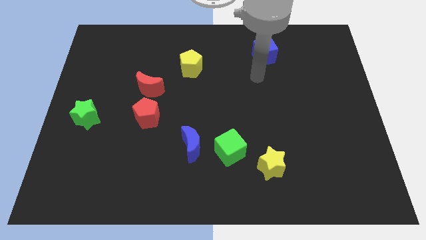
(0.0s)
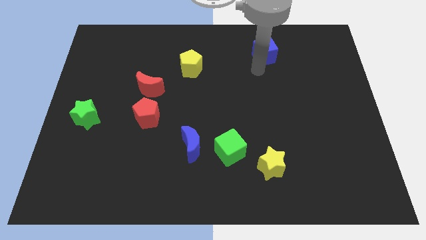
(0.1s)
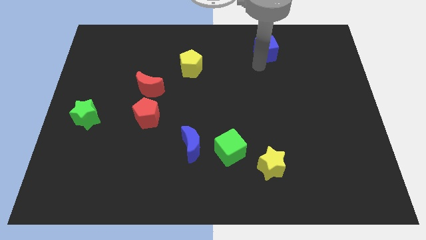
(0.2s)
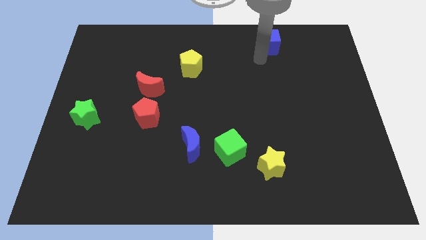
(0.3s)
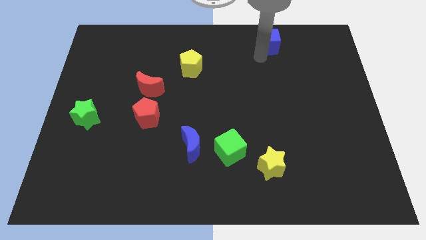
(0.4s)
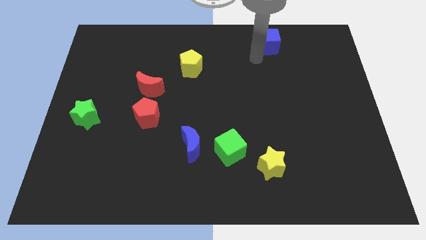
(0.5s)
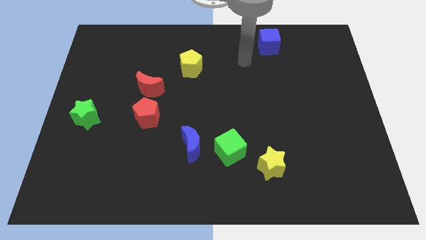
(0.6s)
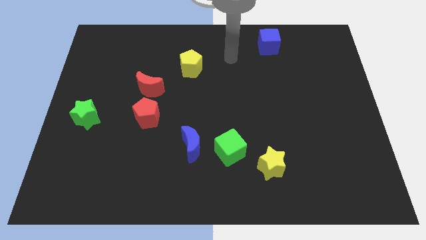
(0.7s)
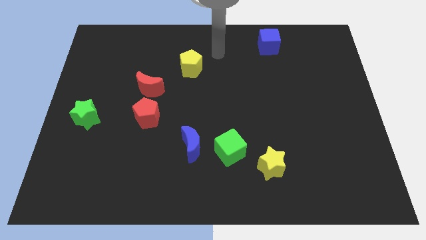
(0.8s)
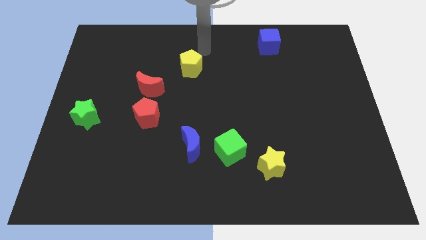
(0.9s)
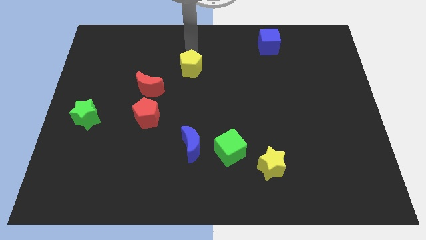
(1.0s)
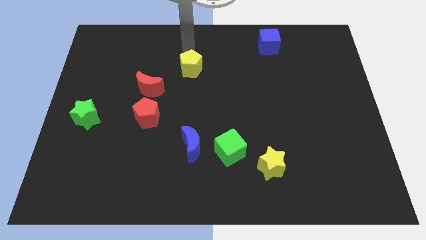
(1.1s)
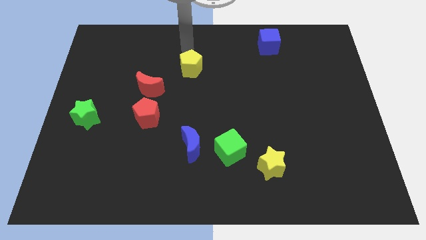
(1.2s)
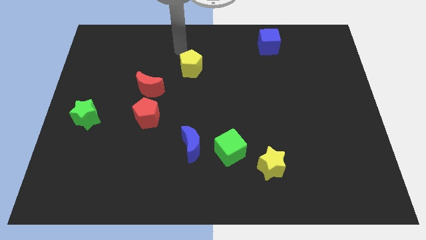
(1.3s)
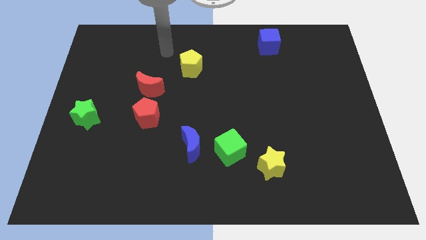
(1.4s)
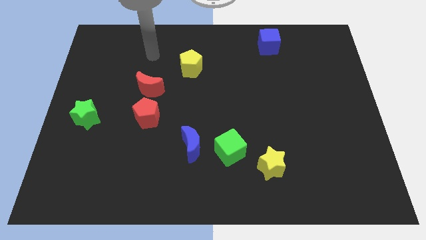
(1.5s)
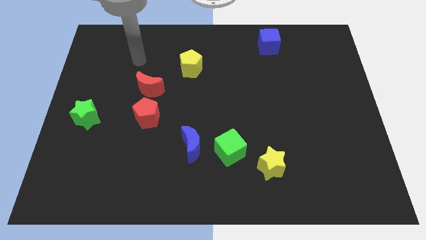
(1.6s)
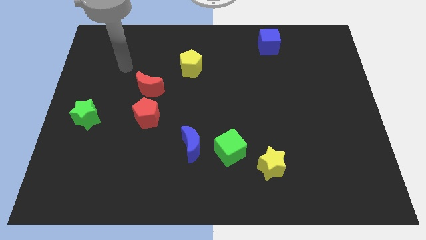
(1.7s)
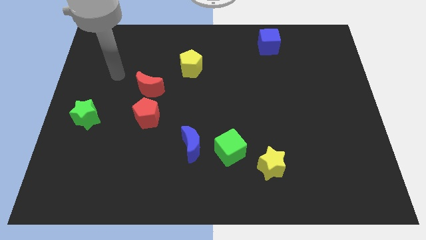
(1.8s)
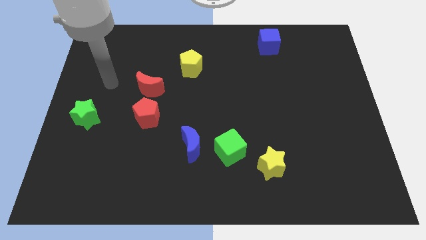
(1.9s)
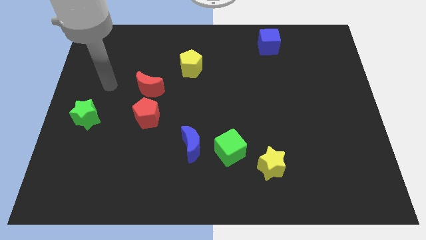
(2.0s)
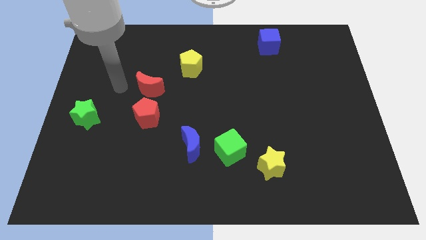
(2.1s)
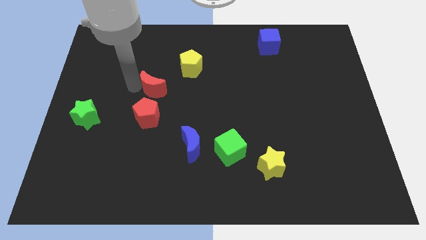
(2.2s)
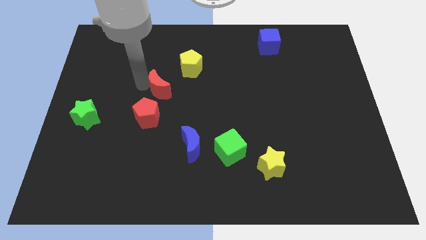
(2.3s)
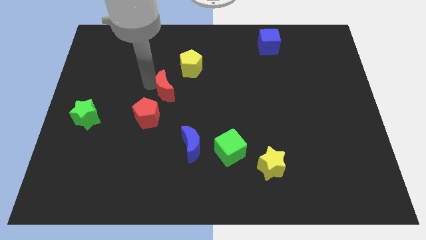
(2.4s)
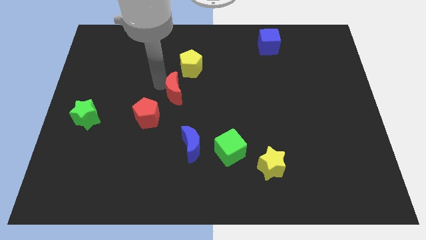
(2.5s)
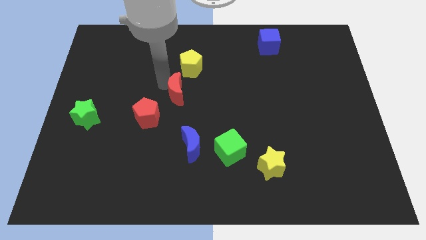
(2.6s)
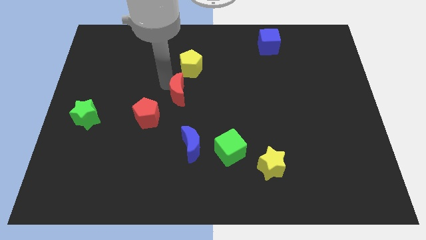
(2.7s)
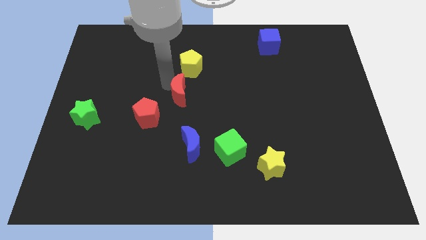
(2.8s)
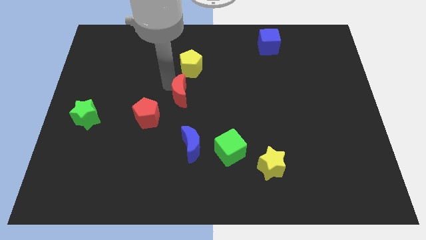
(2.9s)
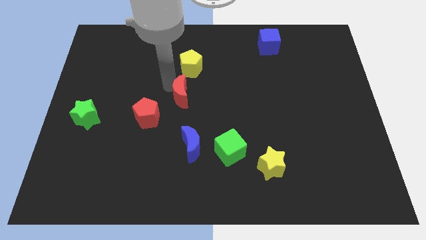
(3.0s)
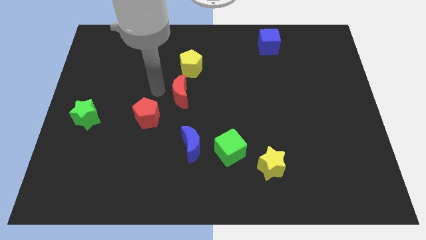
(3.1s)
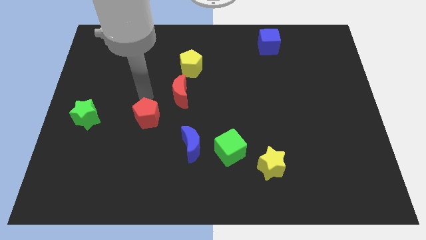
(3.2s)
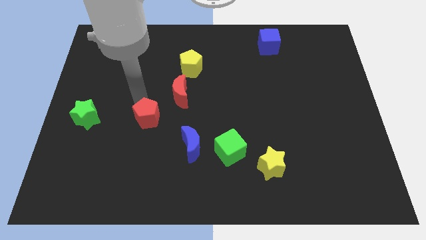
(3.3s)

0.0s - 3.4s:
place red moon to the bottom of yellow pentagon

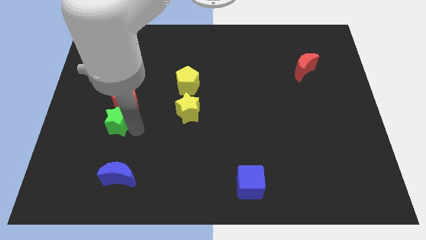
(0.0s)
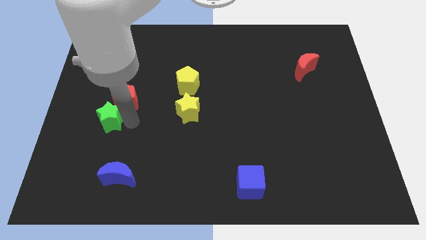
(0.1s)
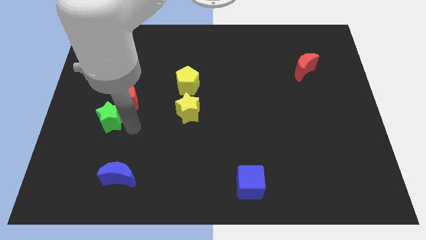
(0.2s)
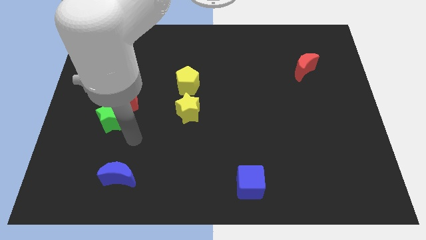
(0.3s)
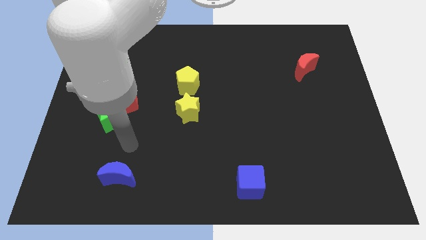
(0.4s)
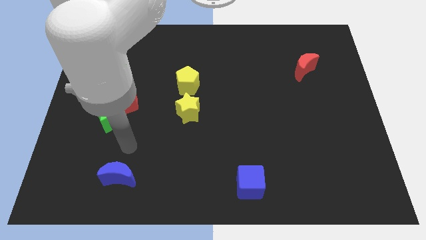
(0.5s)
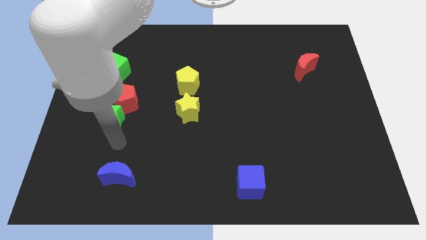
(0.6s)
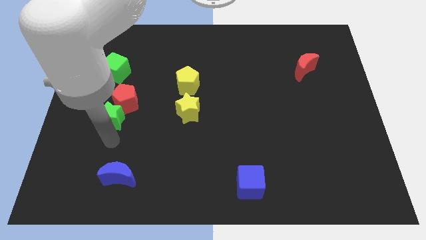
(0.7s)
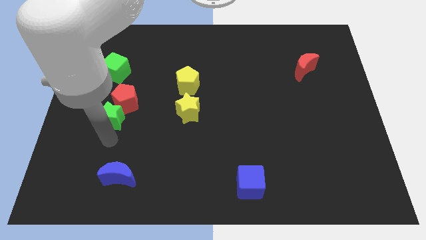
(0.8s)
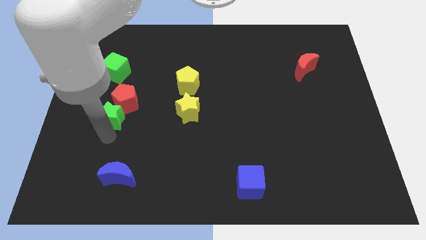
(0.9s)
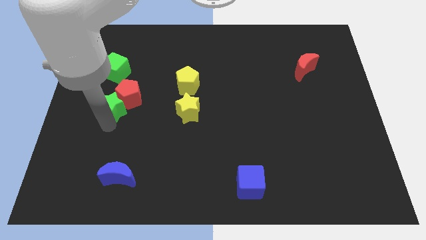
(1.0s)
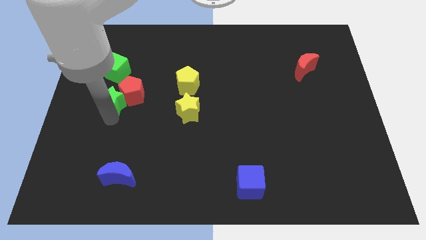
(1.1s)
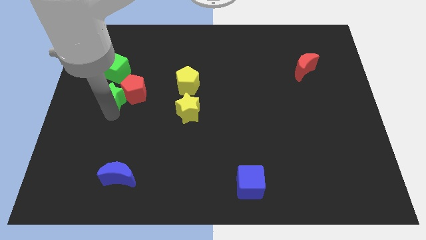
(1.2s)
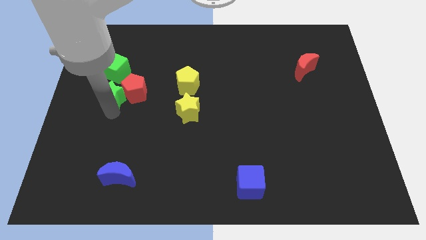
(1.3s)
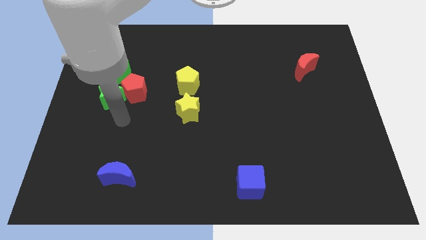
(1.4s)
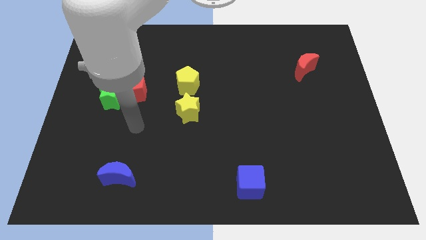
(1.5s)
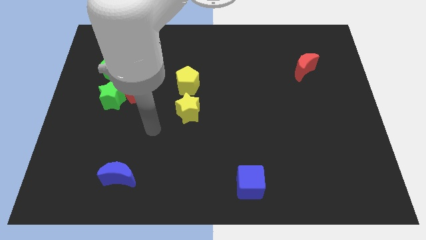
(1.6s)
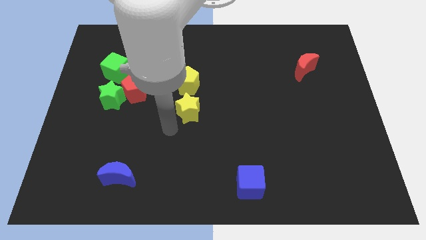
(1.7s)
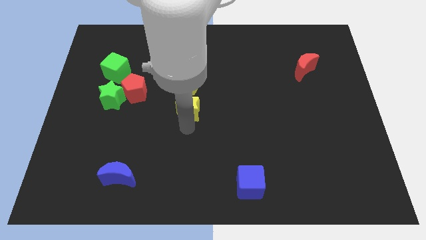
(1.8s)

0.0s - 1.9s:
place green star to the bottom of green cube

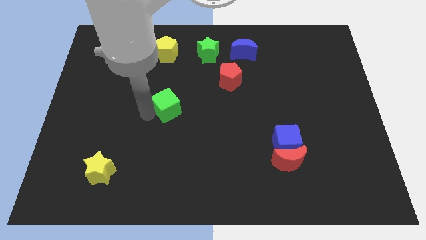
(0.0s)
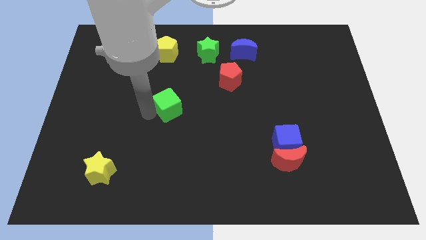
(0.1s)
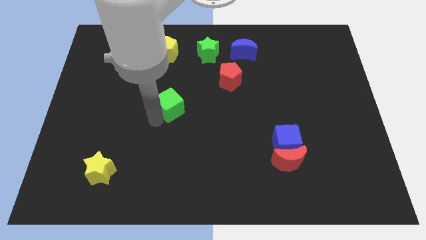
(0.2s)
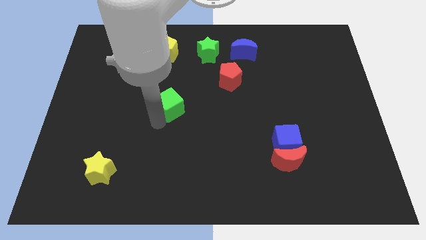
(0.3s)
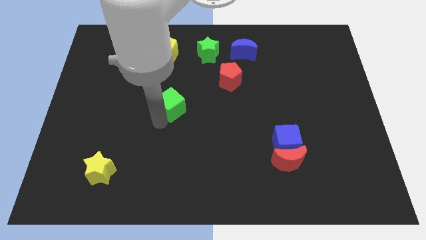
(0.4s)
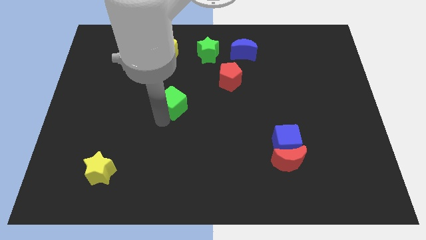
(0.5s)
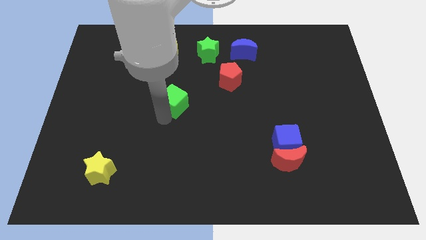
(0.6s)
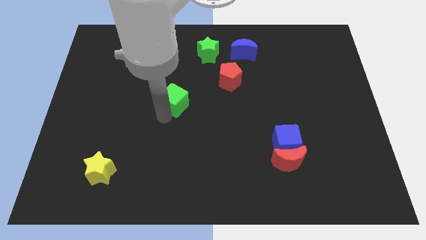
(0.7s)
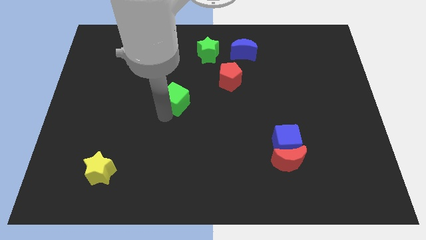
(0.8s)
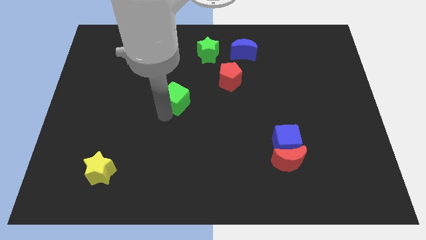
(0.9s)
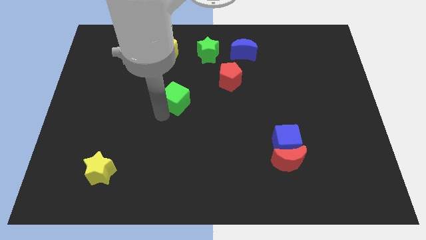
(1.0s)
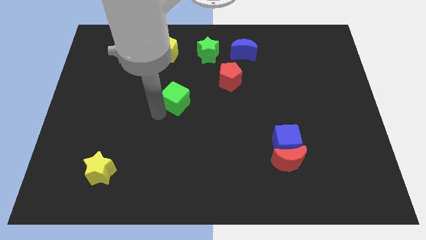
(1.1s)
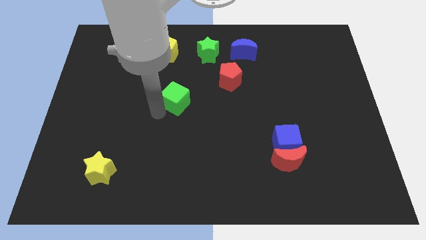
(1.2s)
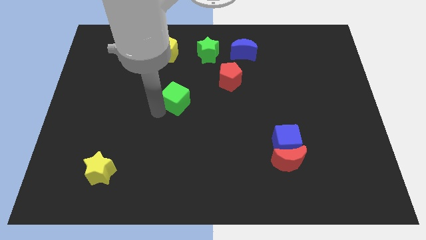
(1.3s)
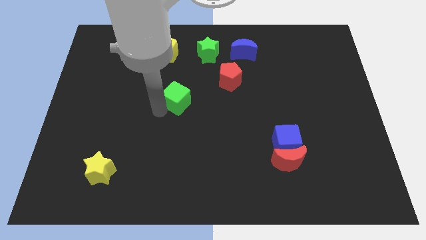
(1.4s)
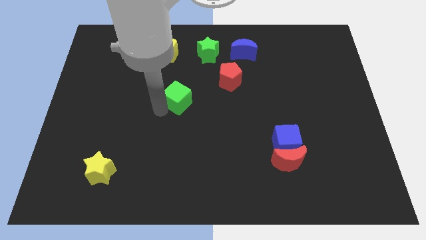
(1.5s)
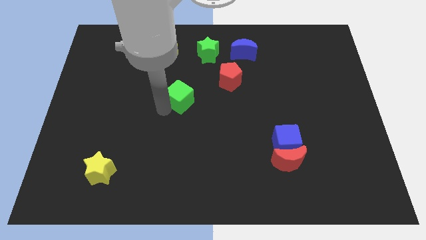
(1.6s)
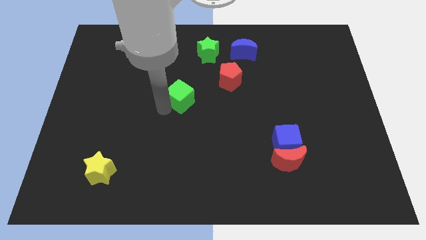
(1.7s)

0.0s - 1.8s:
push the green cube to the bottom right of the yellow pentagon

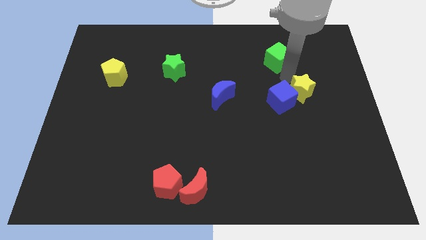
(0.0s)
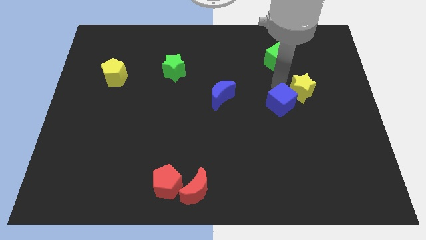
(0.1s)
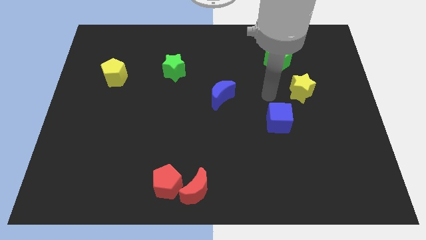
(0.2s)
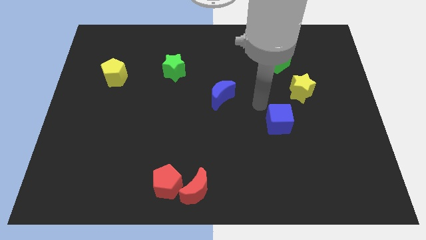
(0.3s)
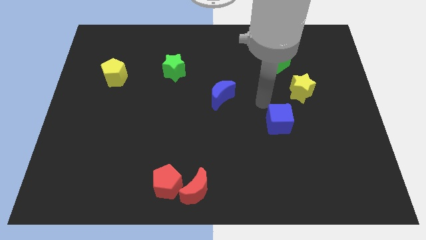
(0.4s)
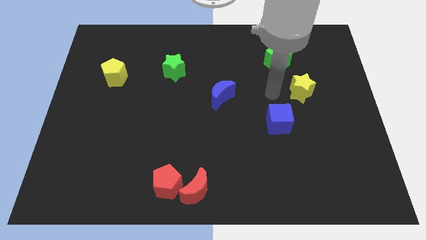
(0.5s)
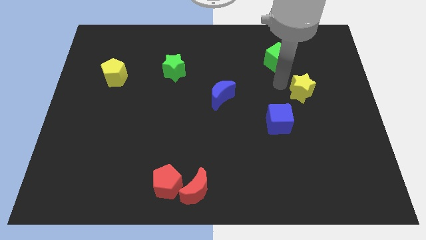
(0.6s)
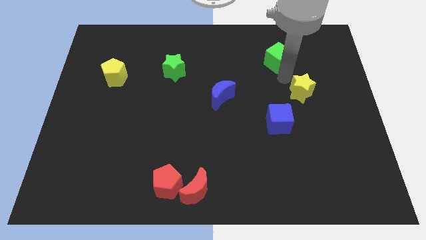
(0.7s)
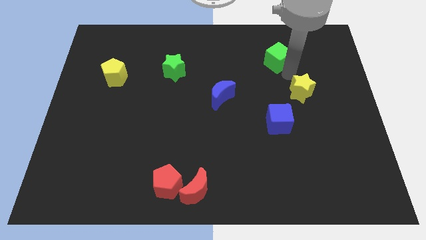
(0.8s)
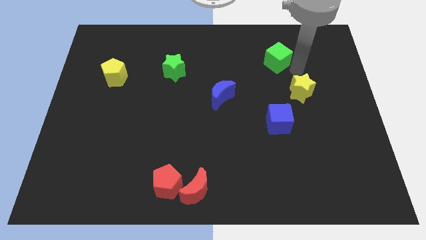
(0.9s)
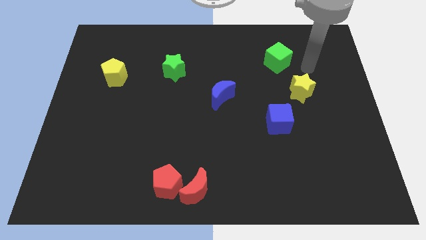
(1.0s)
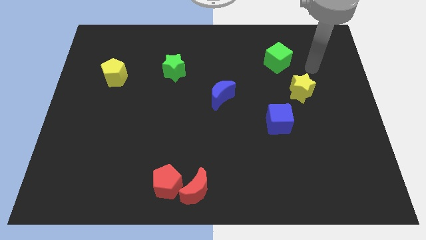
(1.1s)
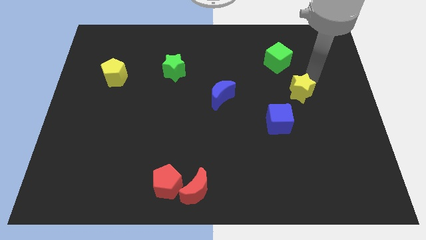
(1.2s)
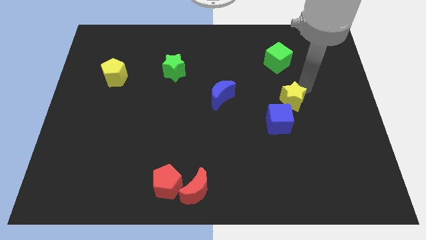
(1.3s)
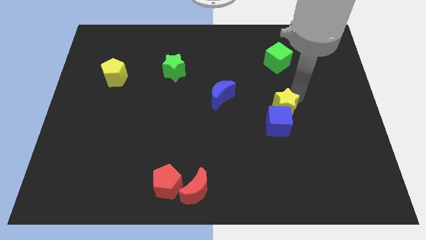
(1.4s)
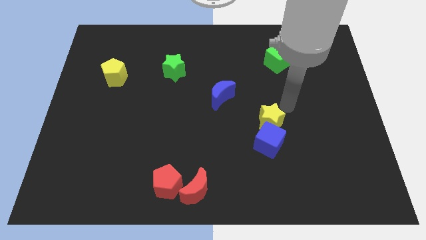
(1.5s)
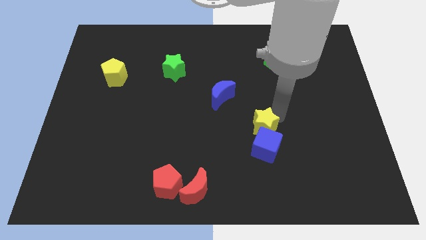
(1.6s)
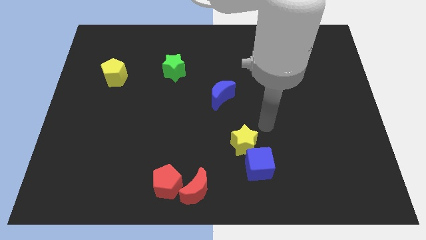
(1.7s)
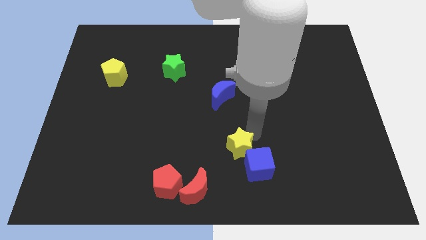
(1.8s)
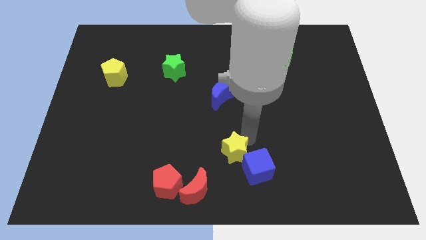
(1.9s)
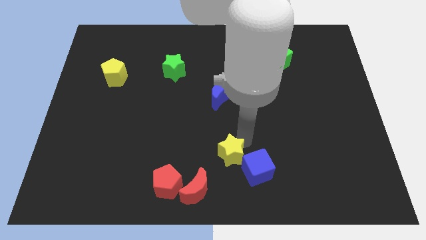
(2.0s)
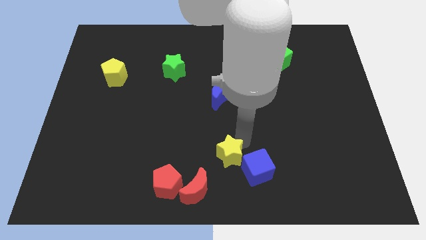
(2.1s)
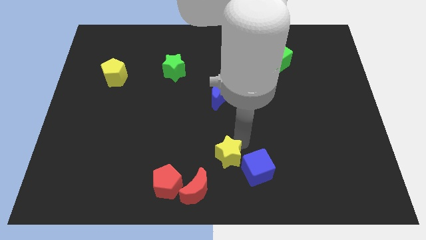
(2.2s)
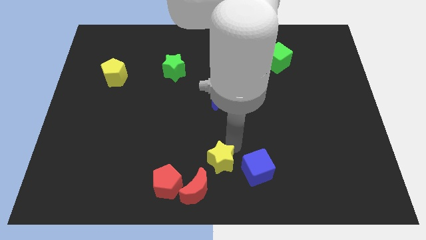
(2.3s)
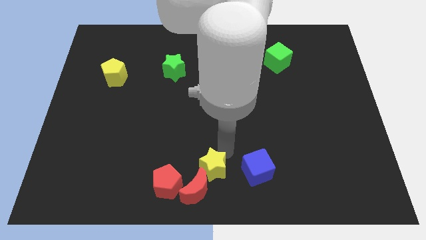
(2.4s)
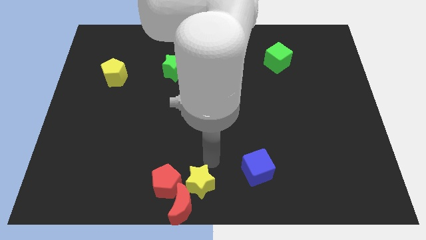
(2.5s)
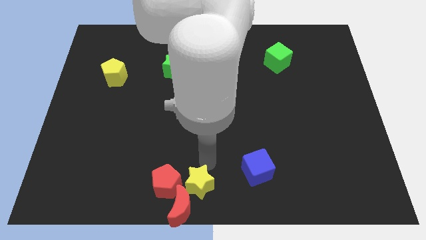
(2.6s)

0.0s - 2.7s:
move the yellow star to the top of red crescent
